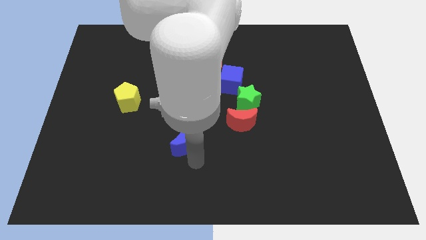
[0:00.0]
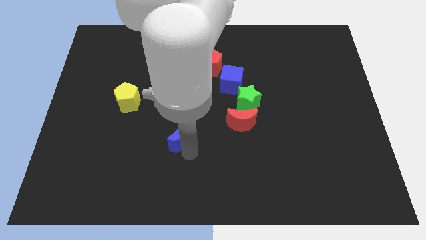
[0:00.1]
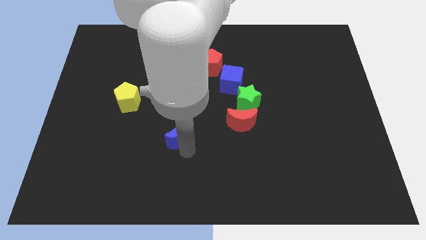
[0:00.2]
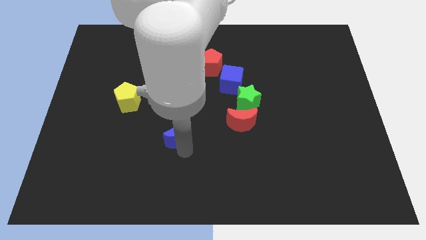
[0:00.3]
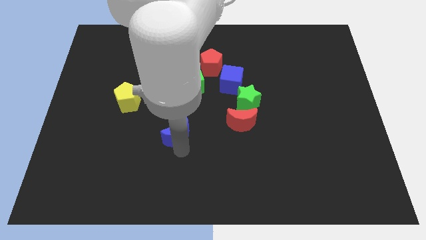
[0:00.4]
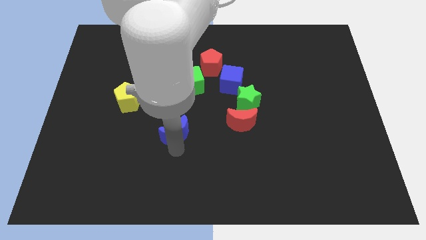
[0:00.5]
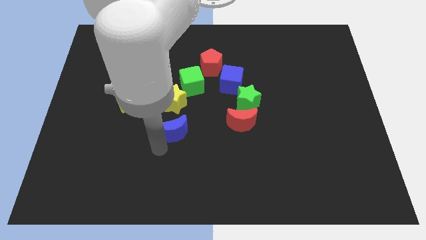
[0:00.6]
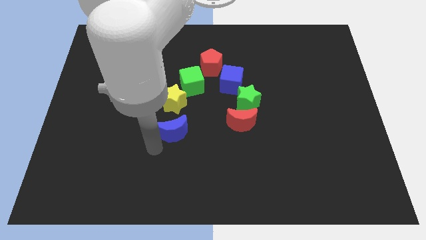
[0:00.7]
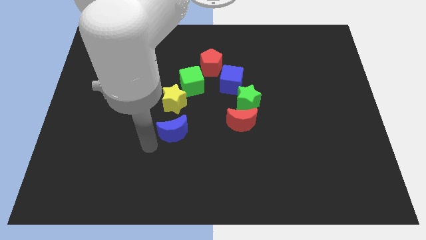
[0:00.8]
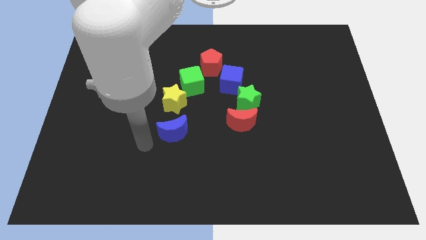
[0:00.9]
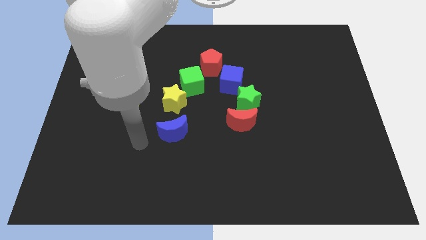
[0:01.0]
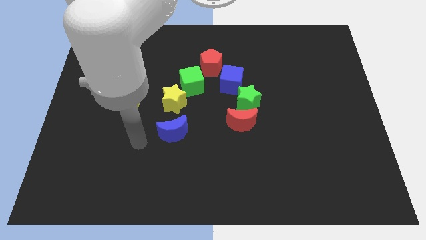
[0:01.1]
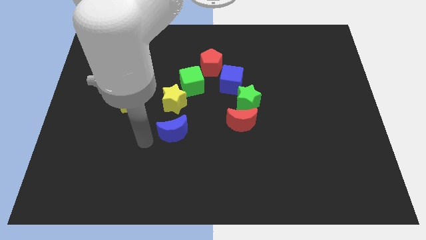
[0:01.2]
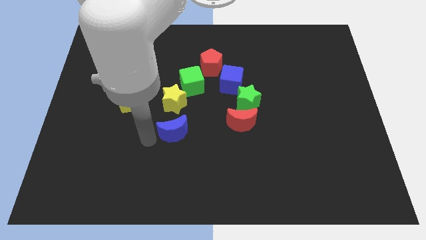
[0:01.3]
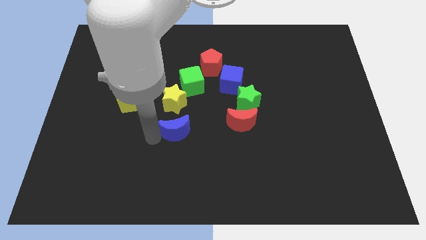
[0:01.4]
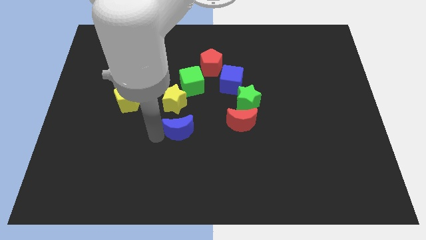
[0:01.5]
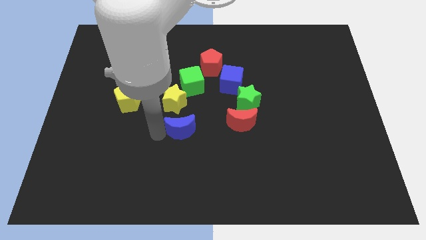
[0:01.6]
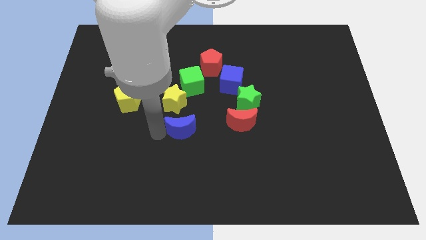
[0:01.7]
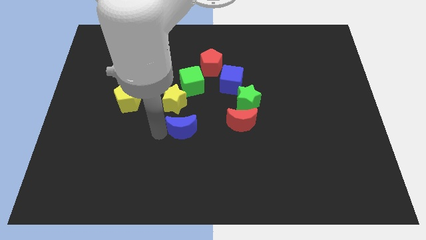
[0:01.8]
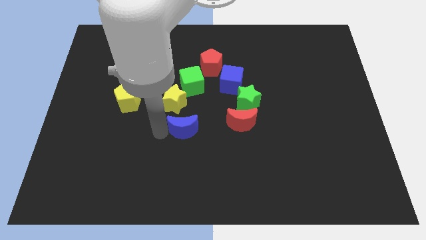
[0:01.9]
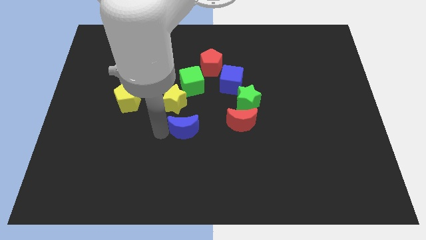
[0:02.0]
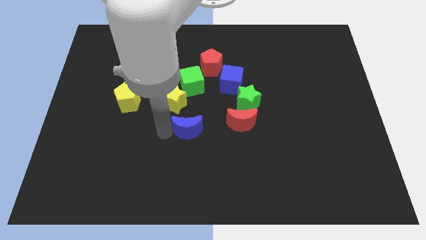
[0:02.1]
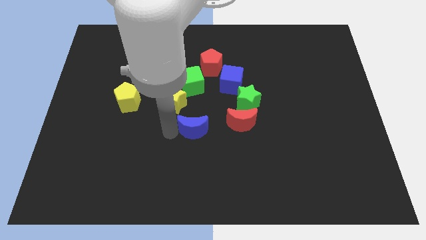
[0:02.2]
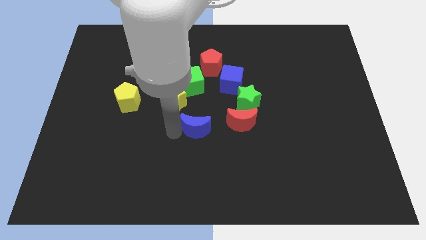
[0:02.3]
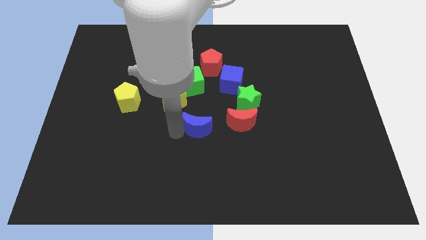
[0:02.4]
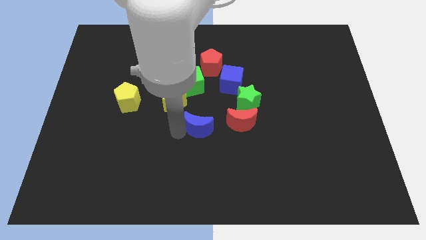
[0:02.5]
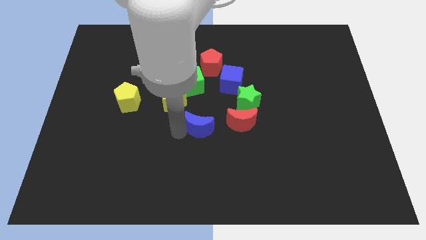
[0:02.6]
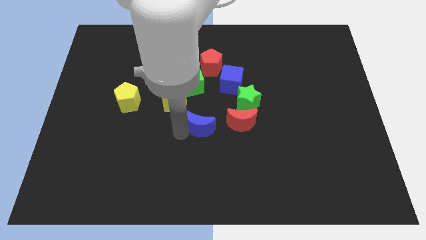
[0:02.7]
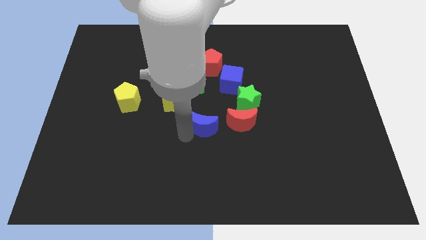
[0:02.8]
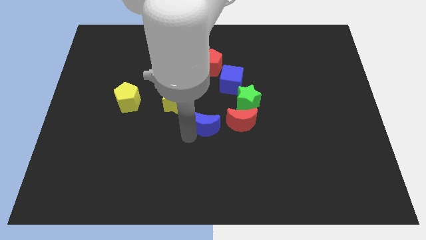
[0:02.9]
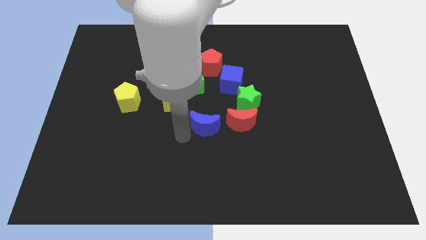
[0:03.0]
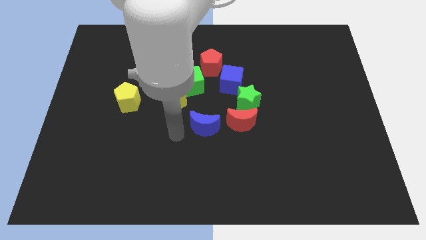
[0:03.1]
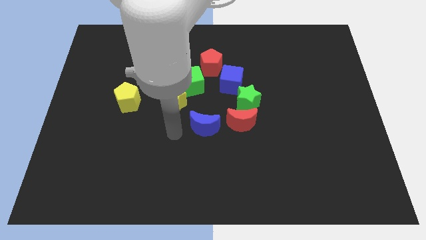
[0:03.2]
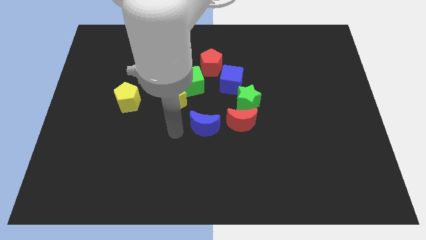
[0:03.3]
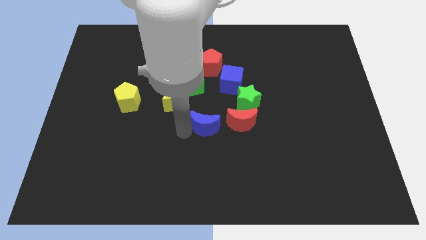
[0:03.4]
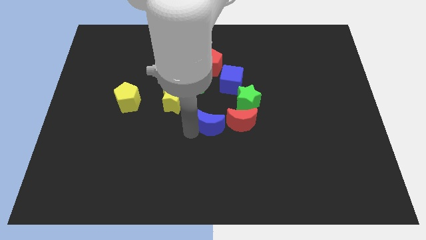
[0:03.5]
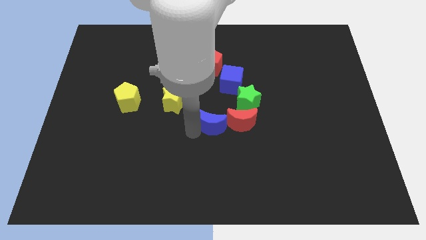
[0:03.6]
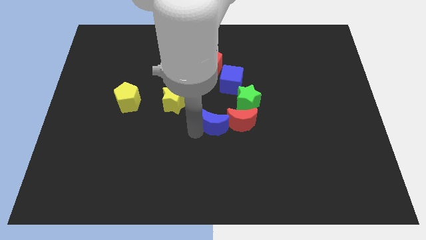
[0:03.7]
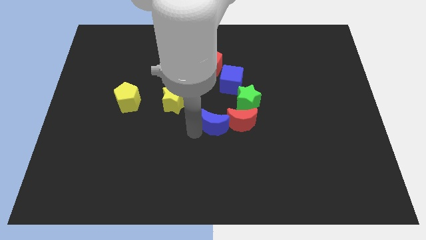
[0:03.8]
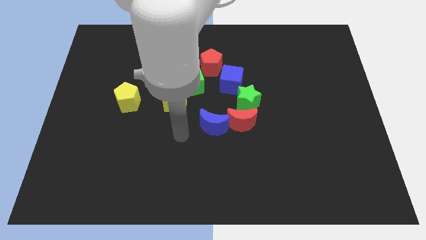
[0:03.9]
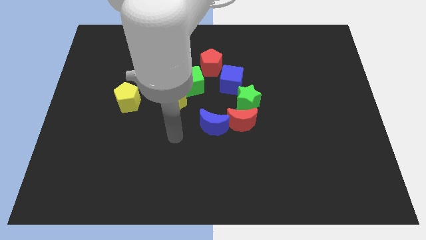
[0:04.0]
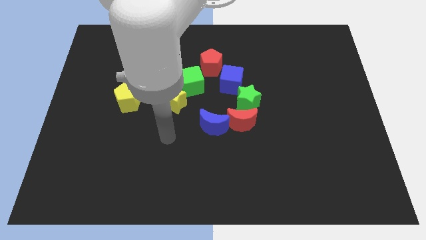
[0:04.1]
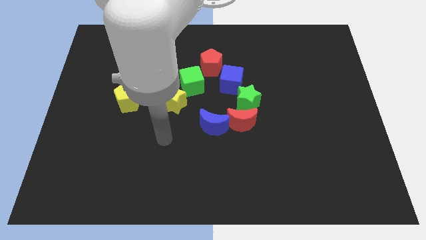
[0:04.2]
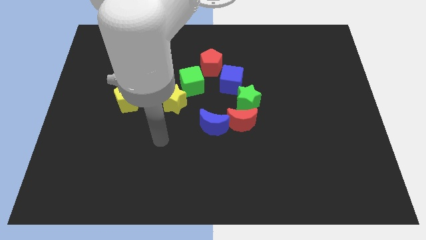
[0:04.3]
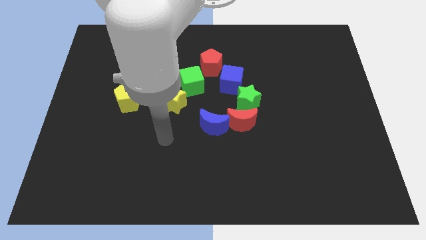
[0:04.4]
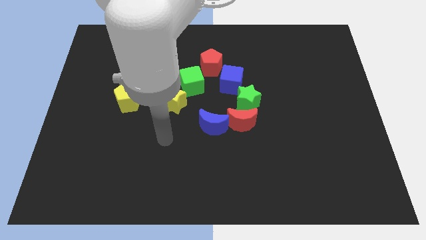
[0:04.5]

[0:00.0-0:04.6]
place the blue moon next to the red moon

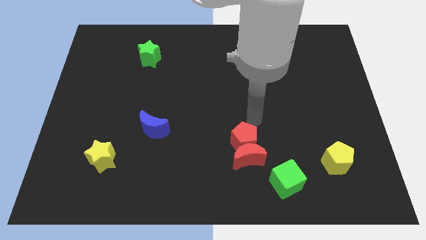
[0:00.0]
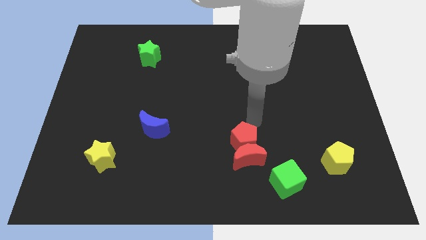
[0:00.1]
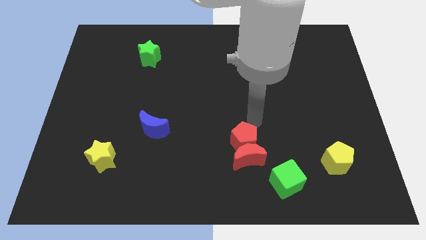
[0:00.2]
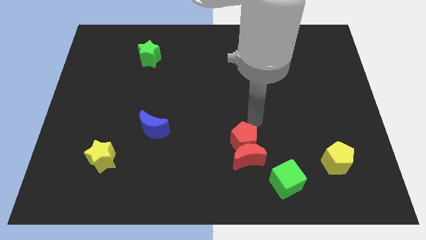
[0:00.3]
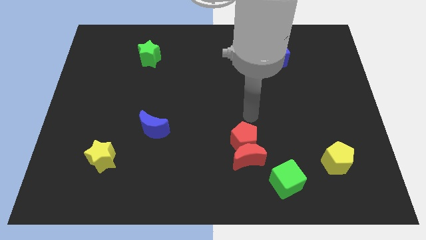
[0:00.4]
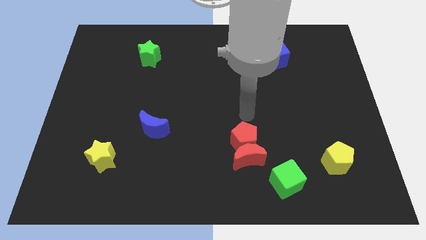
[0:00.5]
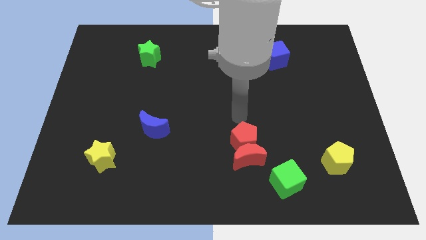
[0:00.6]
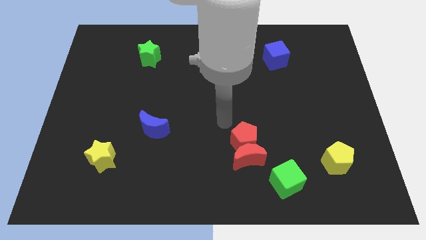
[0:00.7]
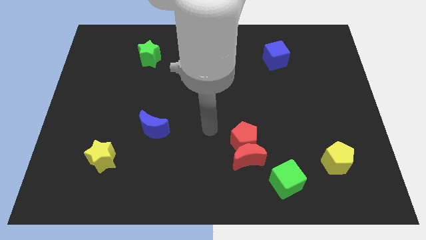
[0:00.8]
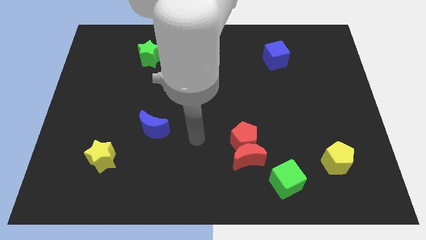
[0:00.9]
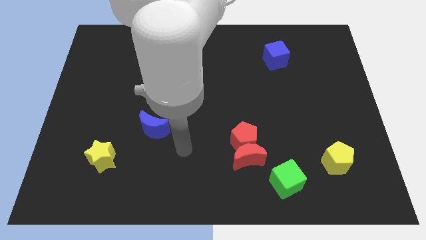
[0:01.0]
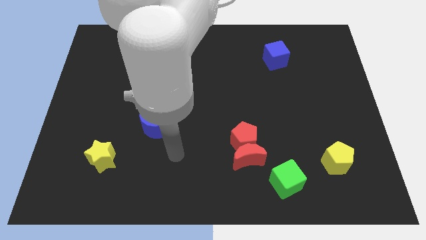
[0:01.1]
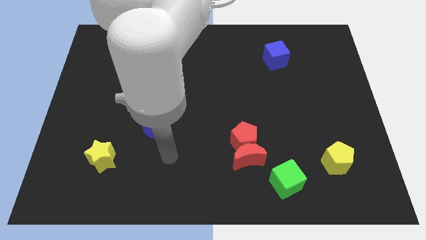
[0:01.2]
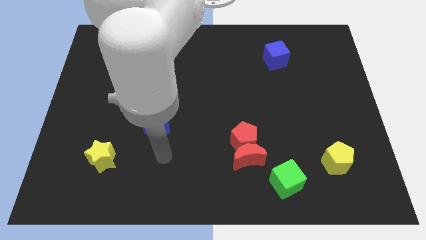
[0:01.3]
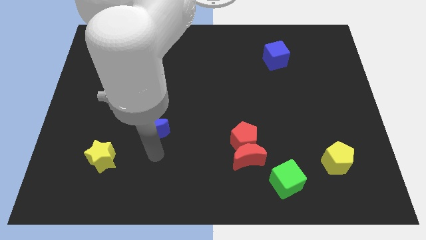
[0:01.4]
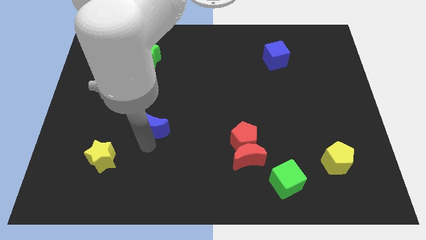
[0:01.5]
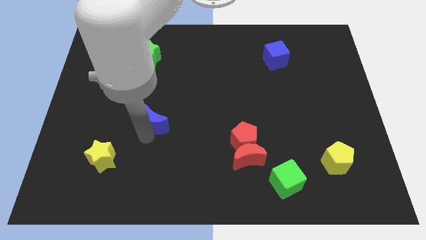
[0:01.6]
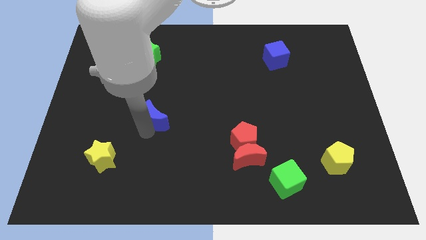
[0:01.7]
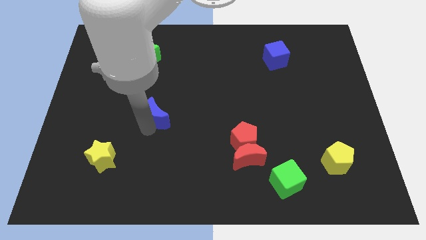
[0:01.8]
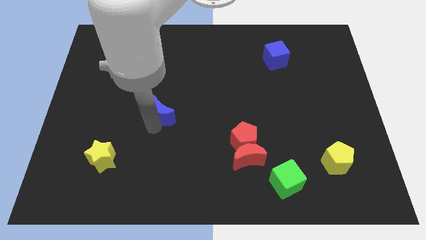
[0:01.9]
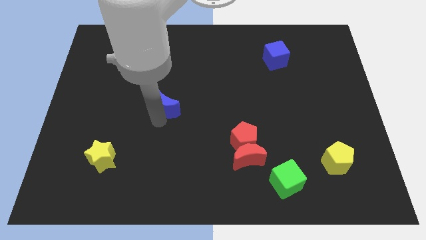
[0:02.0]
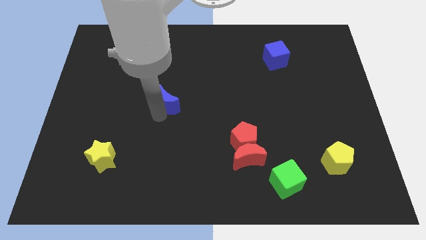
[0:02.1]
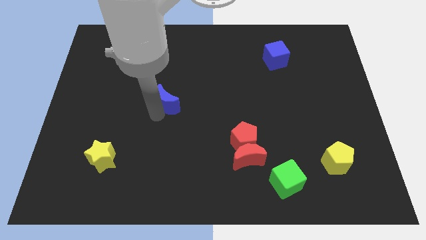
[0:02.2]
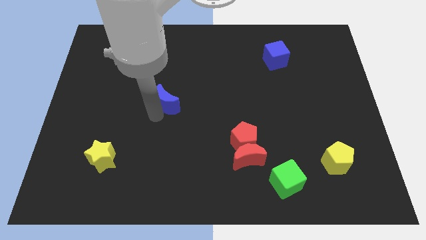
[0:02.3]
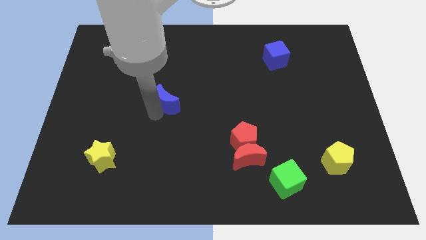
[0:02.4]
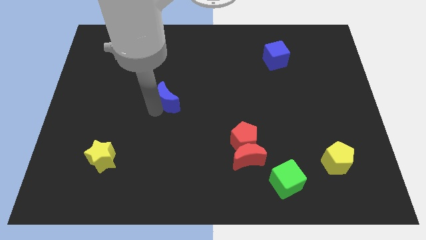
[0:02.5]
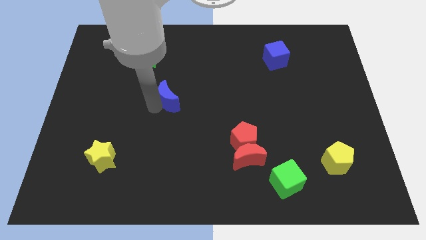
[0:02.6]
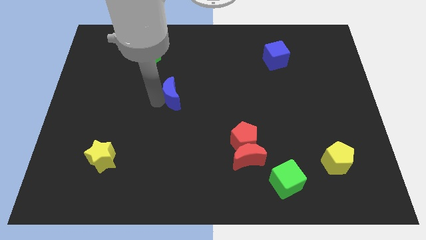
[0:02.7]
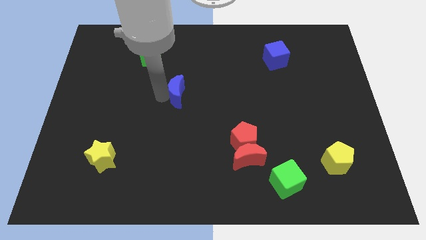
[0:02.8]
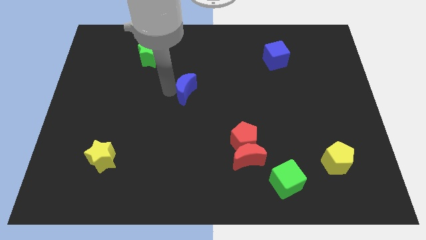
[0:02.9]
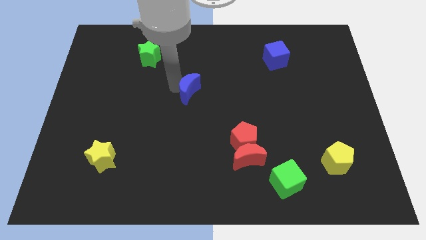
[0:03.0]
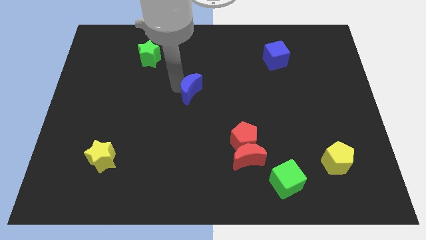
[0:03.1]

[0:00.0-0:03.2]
place the blue crescent in between the red pentagon and the green star

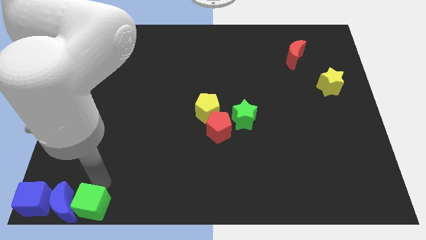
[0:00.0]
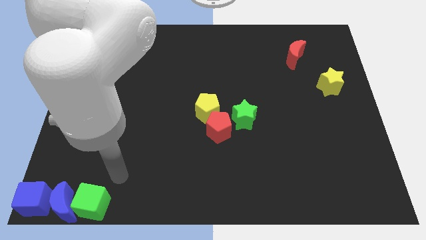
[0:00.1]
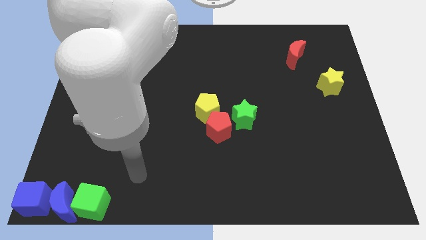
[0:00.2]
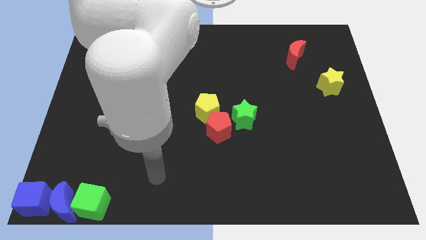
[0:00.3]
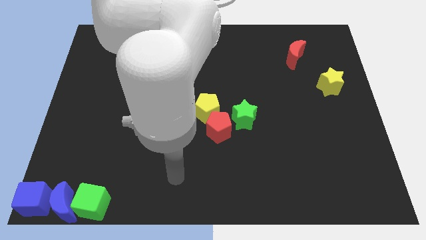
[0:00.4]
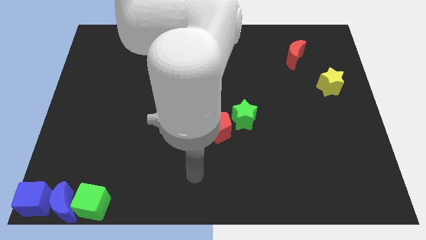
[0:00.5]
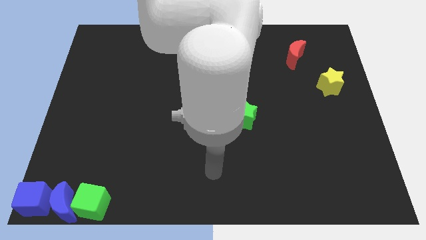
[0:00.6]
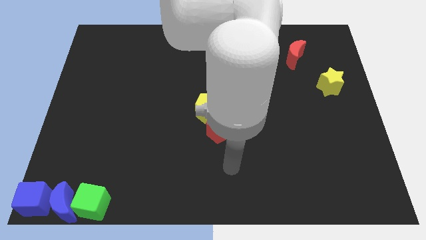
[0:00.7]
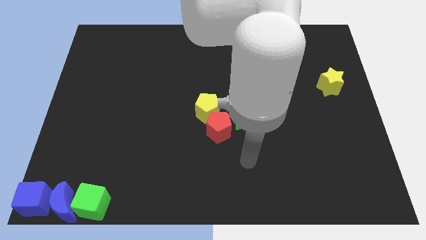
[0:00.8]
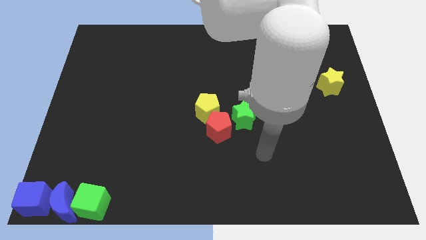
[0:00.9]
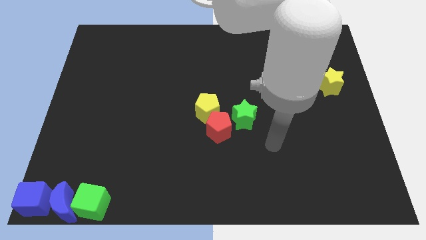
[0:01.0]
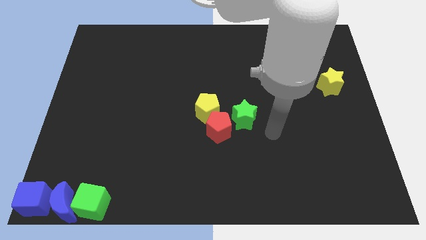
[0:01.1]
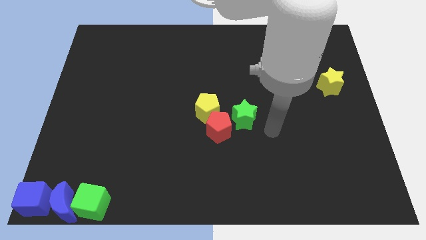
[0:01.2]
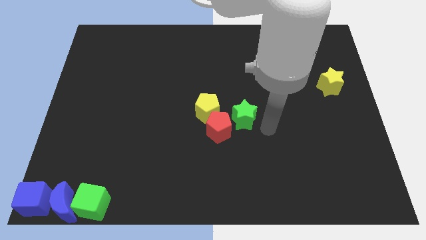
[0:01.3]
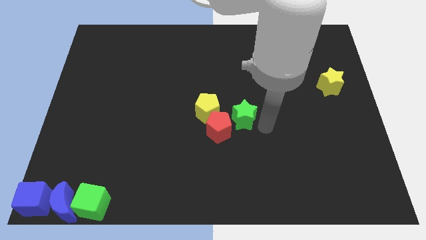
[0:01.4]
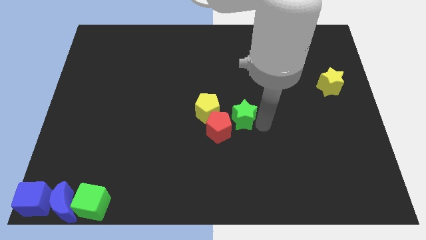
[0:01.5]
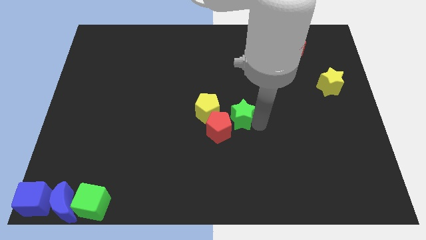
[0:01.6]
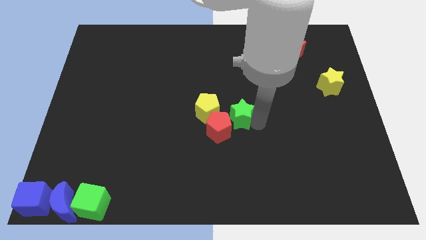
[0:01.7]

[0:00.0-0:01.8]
touch the right side of the green star
